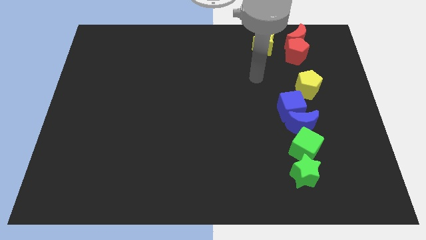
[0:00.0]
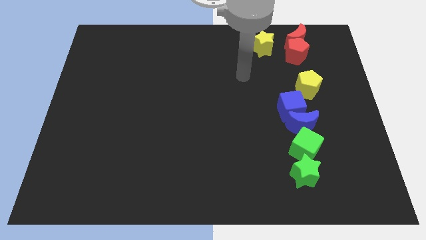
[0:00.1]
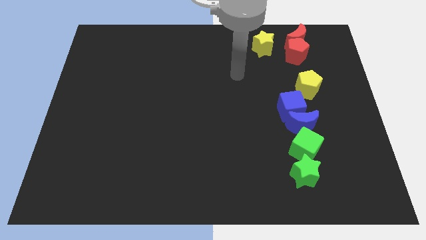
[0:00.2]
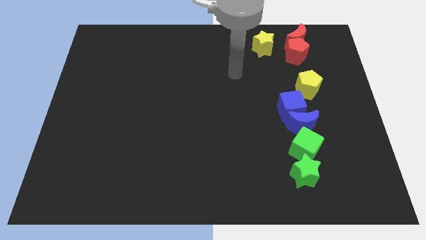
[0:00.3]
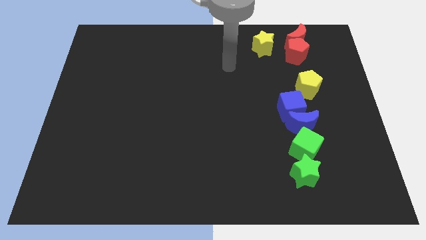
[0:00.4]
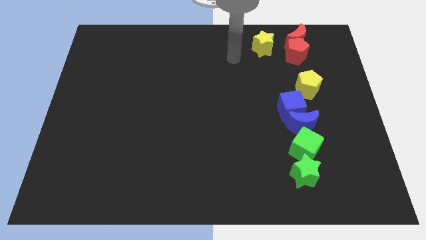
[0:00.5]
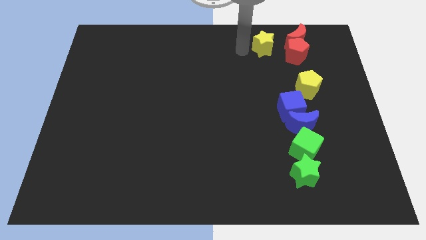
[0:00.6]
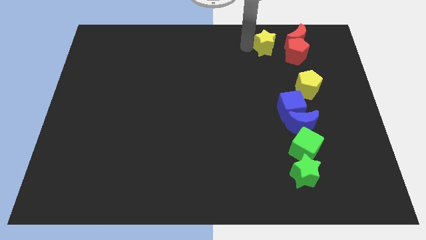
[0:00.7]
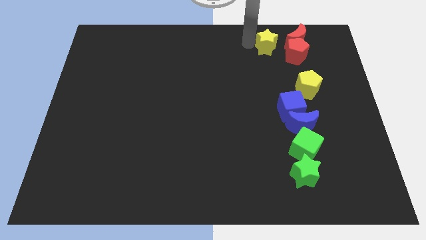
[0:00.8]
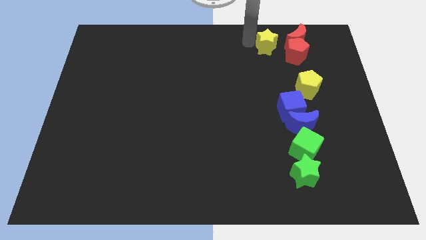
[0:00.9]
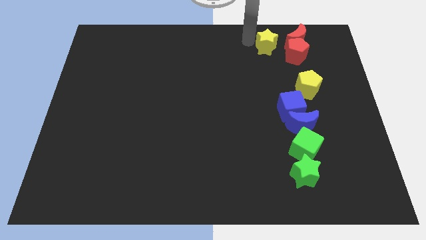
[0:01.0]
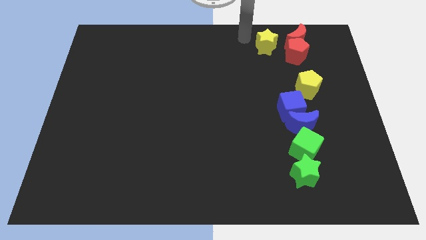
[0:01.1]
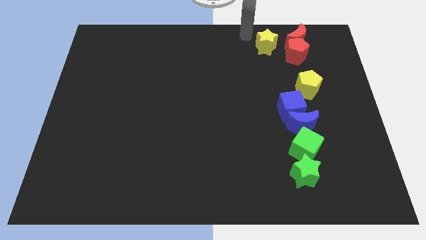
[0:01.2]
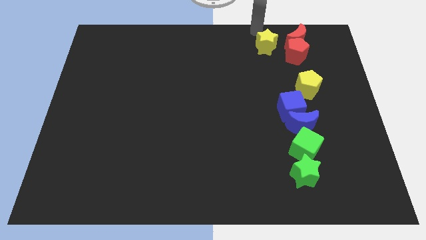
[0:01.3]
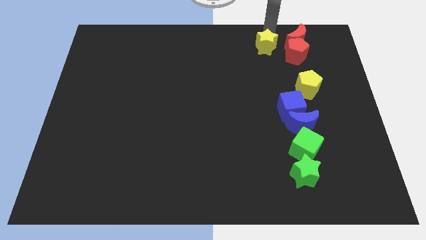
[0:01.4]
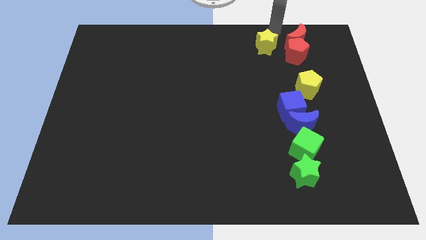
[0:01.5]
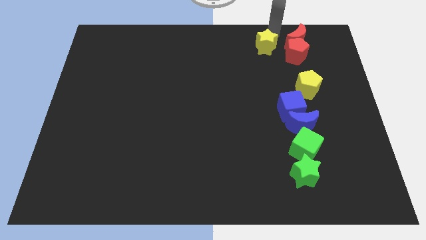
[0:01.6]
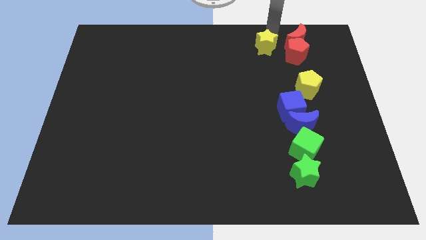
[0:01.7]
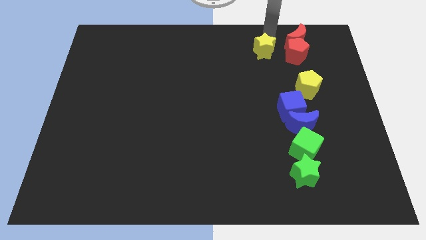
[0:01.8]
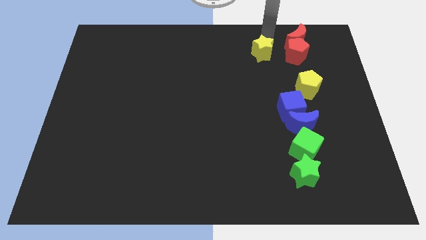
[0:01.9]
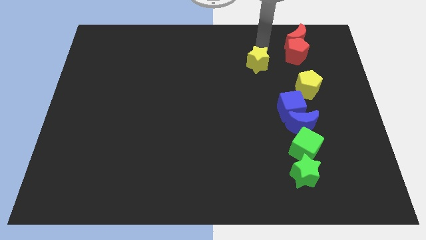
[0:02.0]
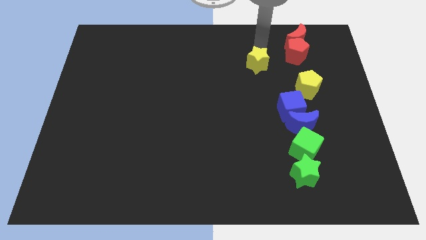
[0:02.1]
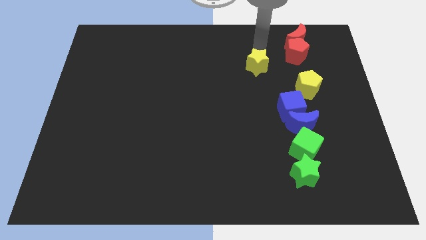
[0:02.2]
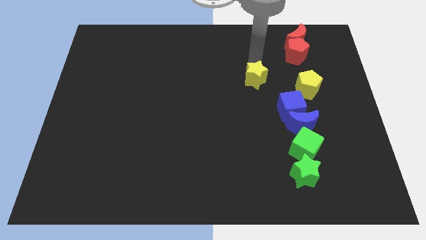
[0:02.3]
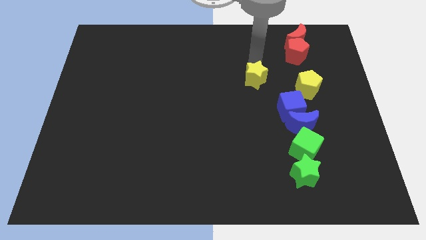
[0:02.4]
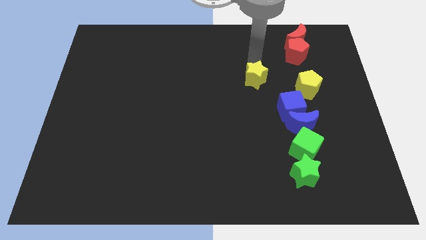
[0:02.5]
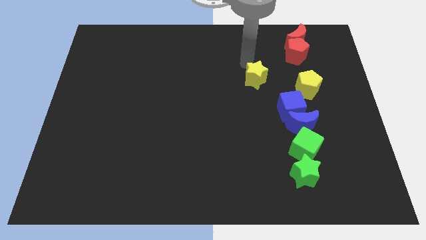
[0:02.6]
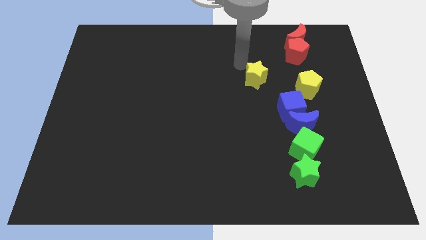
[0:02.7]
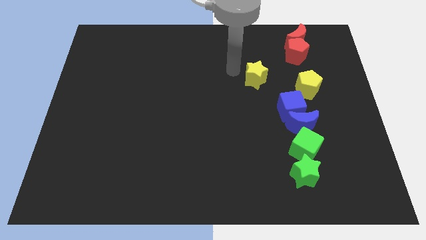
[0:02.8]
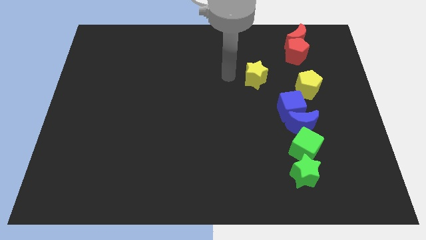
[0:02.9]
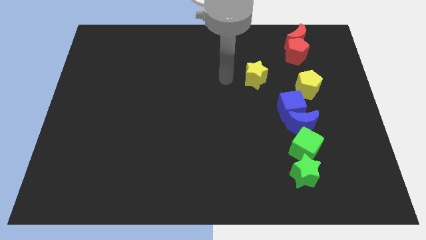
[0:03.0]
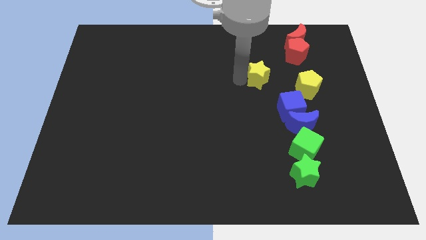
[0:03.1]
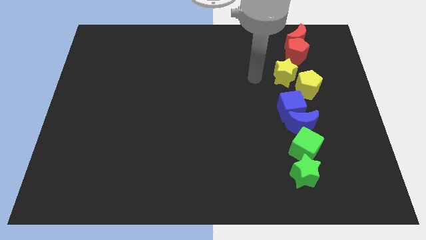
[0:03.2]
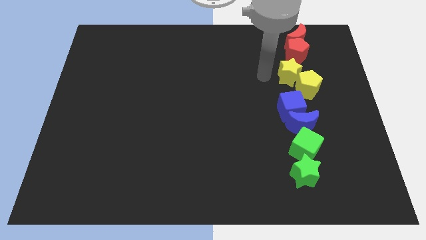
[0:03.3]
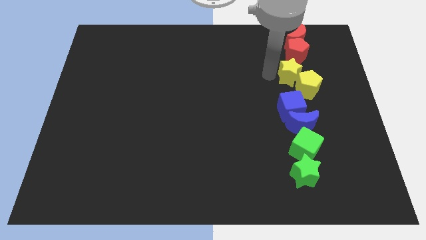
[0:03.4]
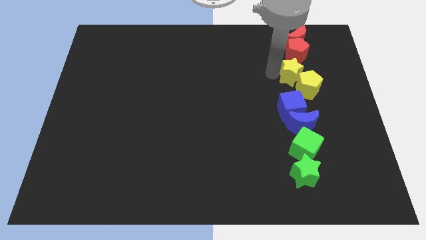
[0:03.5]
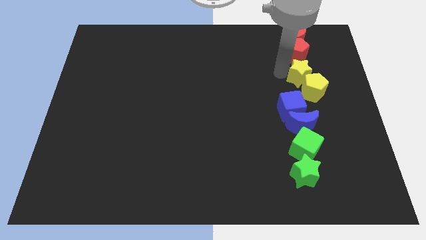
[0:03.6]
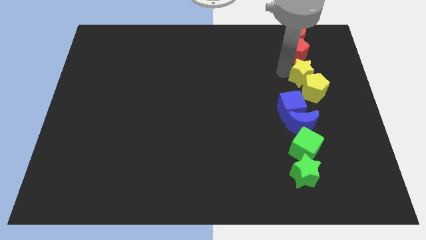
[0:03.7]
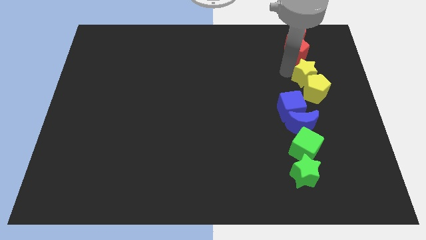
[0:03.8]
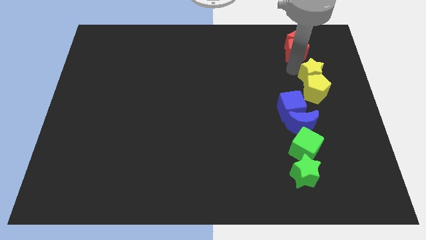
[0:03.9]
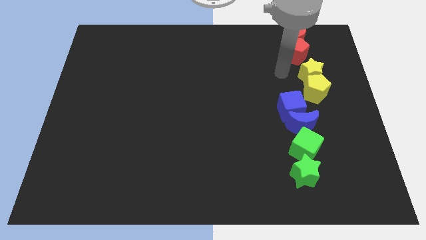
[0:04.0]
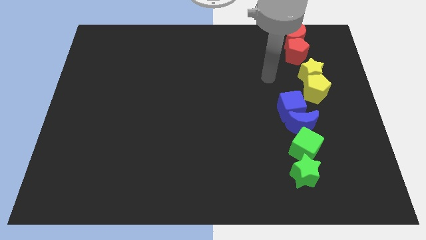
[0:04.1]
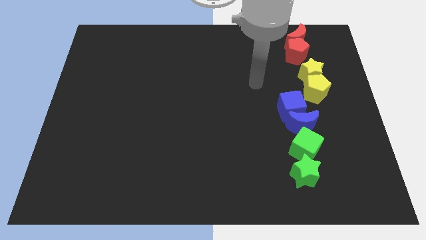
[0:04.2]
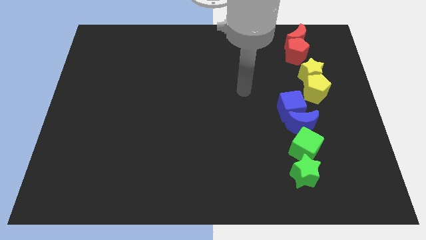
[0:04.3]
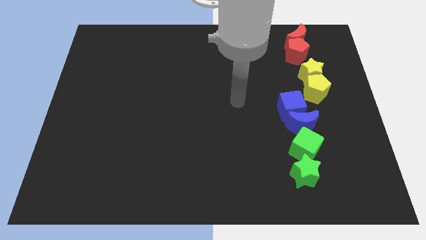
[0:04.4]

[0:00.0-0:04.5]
put the yellow blocks together at the bottom side of the red blocks

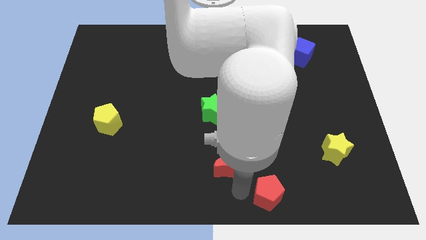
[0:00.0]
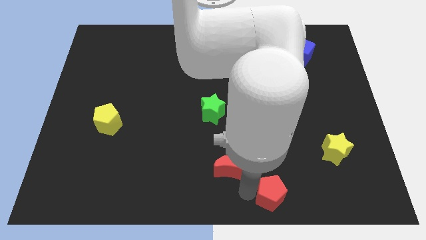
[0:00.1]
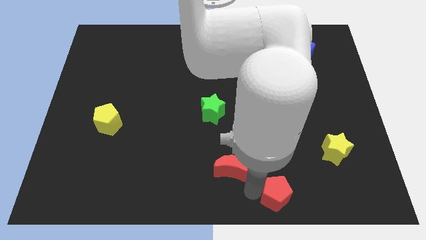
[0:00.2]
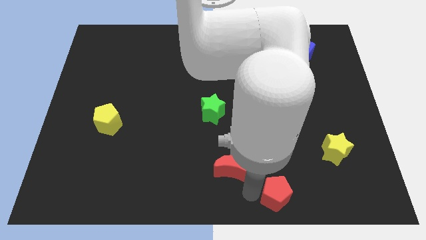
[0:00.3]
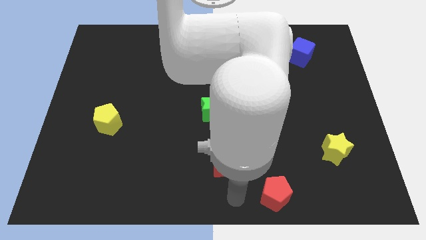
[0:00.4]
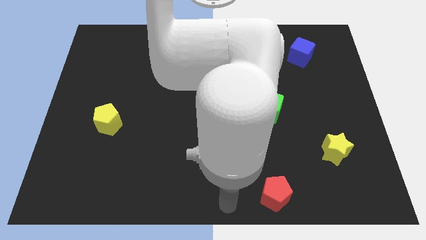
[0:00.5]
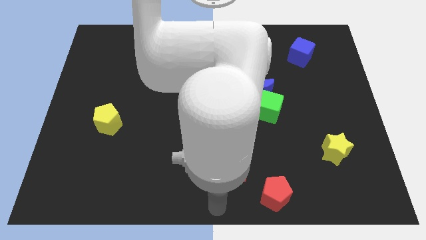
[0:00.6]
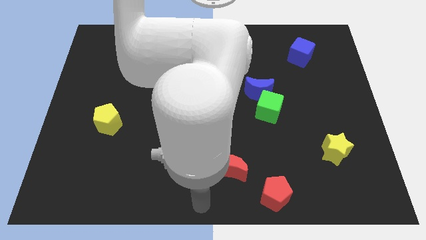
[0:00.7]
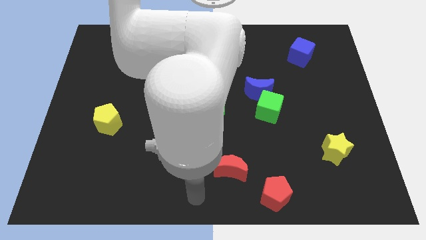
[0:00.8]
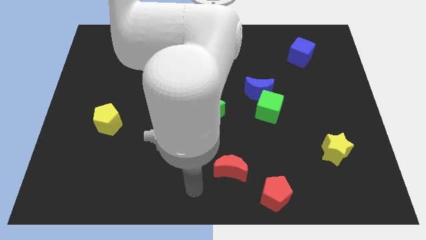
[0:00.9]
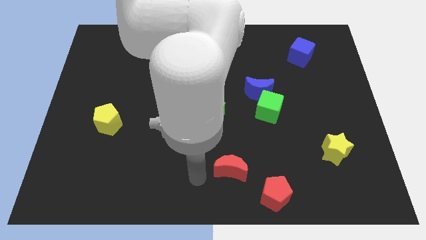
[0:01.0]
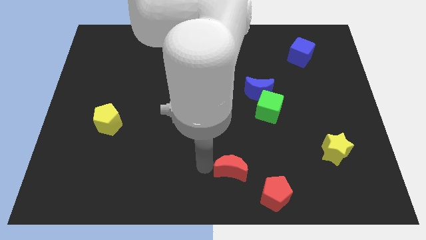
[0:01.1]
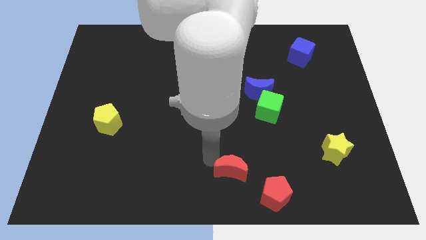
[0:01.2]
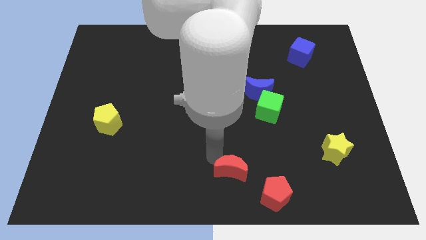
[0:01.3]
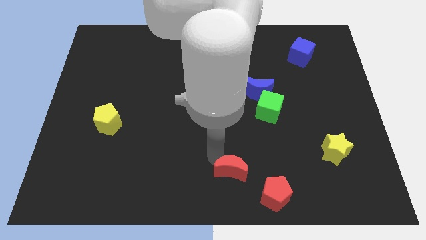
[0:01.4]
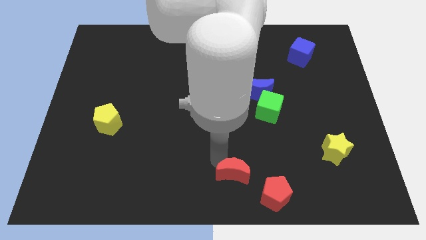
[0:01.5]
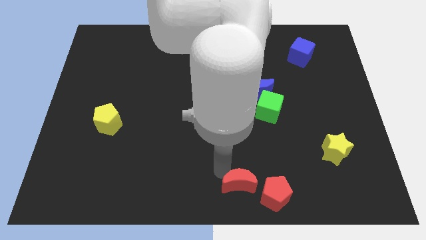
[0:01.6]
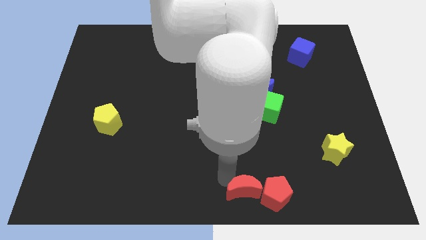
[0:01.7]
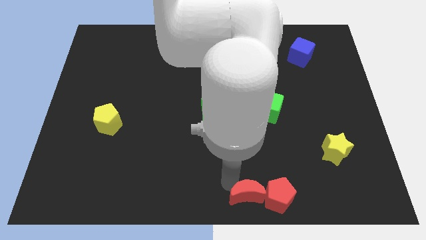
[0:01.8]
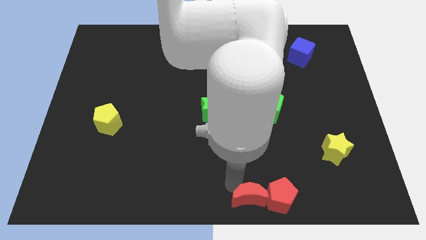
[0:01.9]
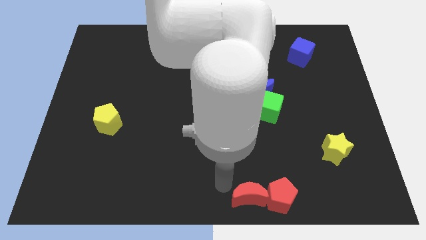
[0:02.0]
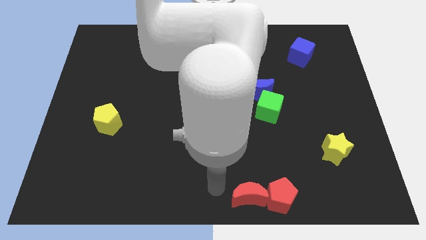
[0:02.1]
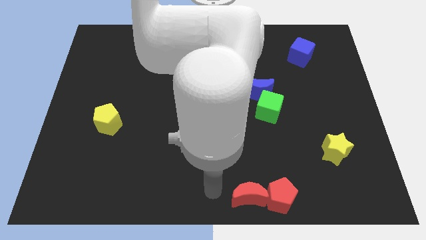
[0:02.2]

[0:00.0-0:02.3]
place the red crescent to the left of the red pentagon

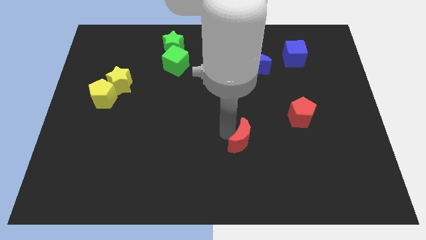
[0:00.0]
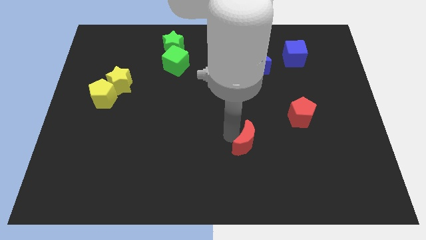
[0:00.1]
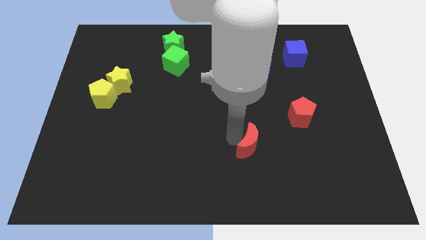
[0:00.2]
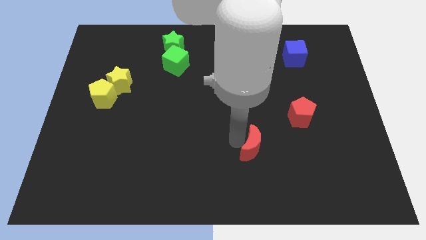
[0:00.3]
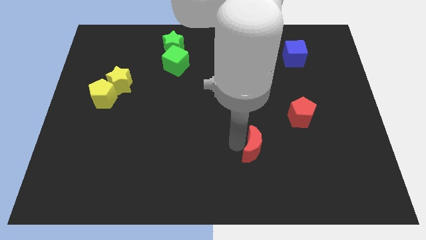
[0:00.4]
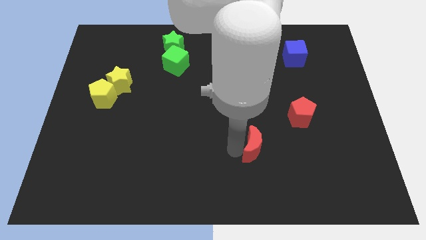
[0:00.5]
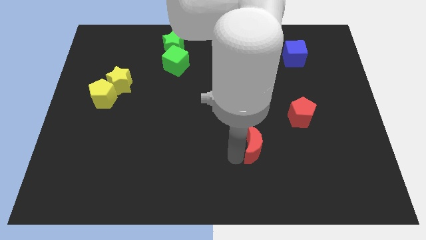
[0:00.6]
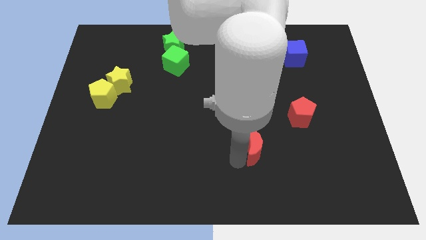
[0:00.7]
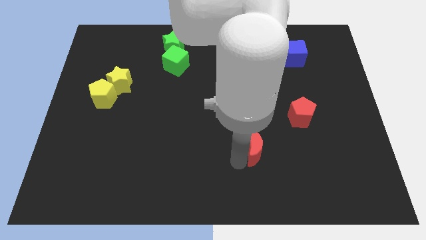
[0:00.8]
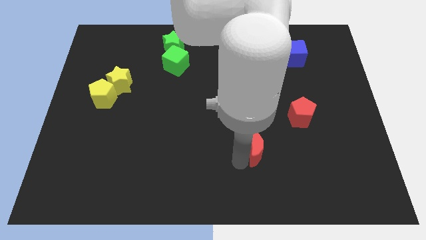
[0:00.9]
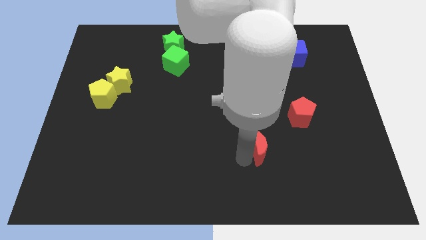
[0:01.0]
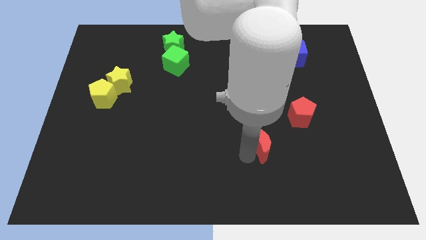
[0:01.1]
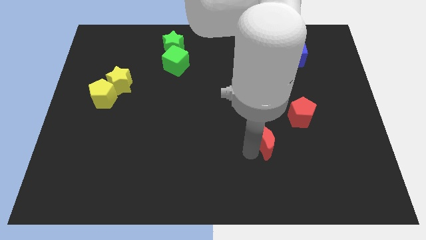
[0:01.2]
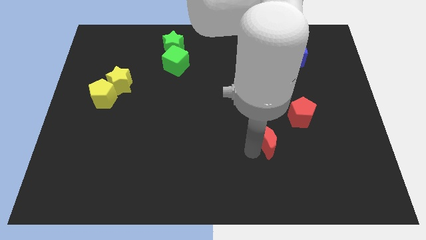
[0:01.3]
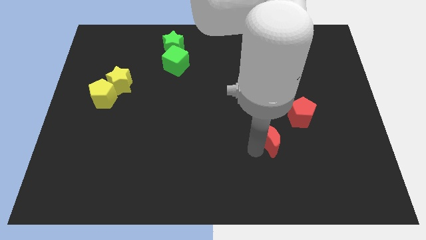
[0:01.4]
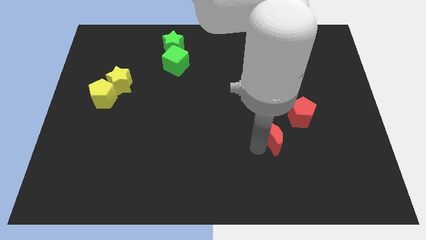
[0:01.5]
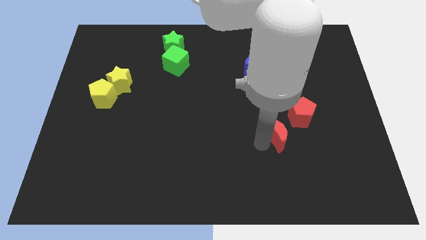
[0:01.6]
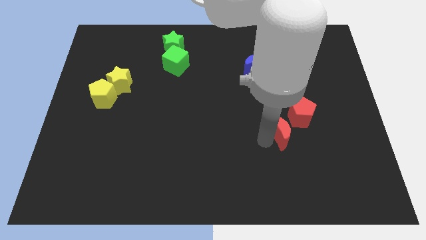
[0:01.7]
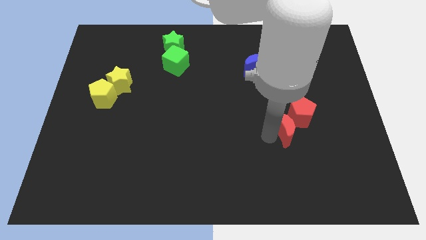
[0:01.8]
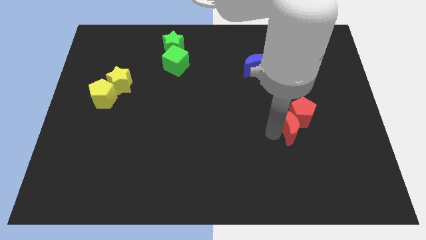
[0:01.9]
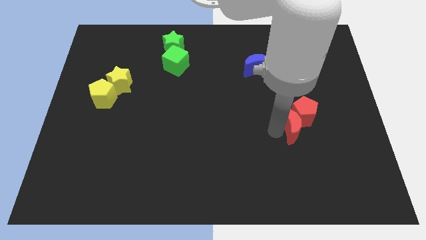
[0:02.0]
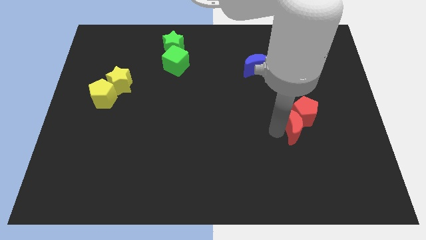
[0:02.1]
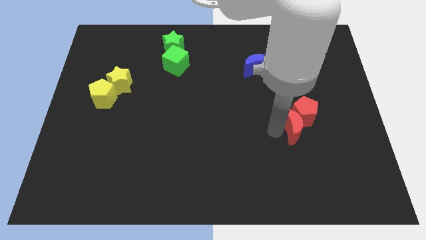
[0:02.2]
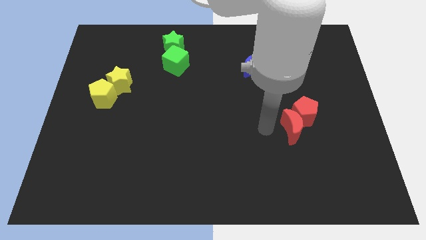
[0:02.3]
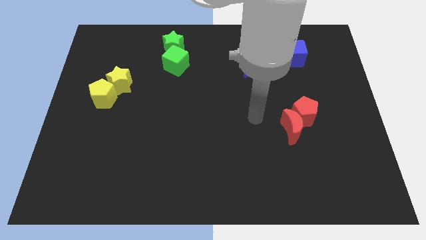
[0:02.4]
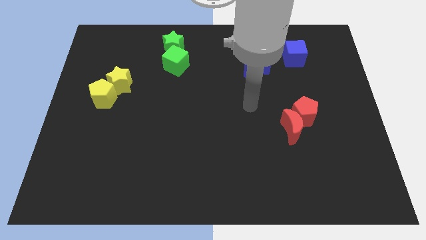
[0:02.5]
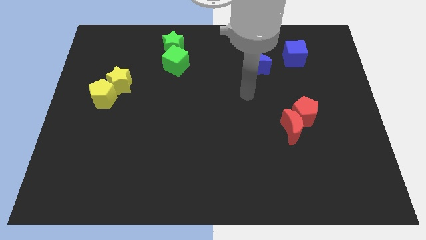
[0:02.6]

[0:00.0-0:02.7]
place the red moon into red pentagon at bottom left side
